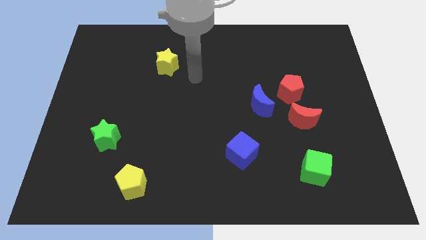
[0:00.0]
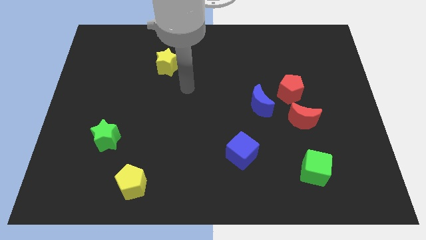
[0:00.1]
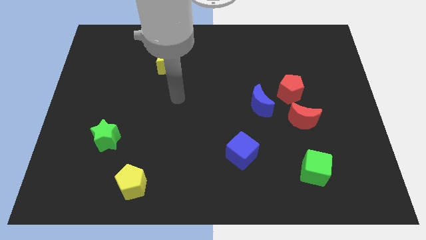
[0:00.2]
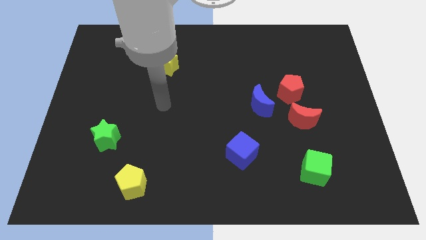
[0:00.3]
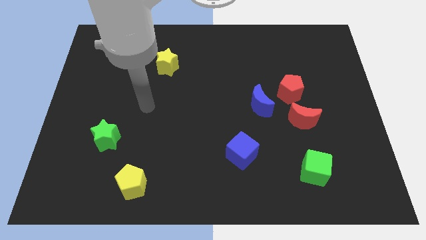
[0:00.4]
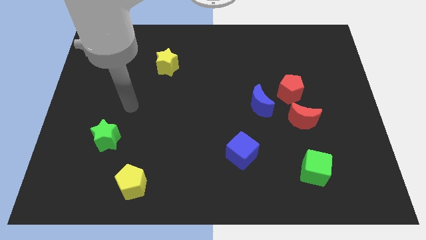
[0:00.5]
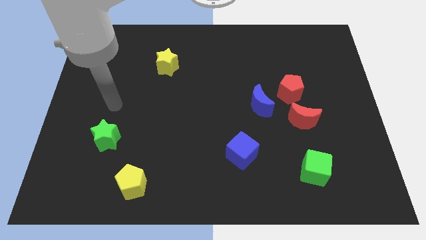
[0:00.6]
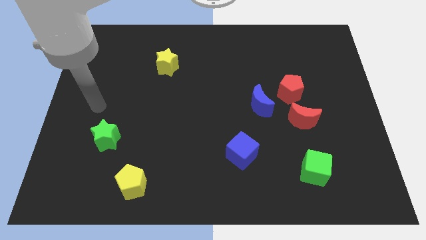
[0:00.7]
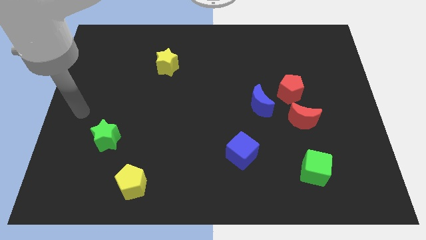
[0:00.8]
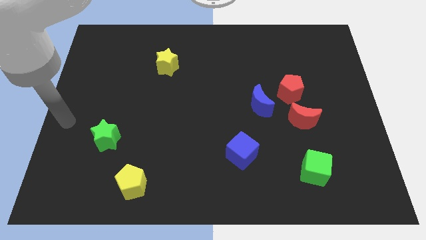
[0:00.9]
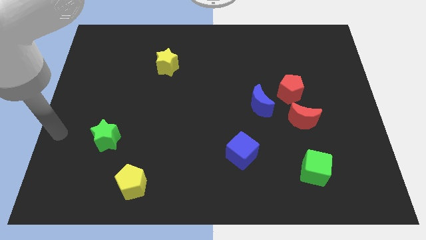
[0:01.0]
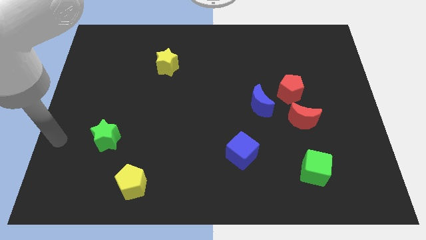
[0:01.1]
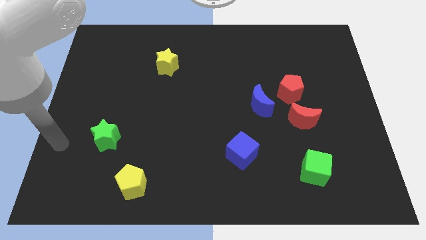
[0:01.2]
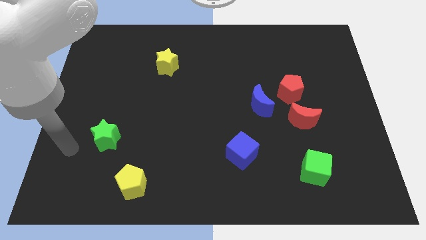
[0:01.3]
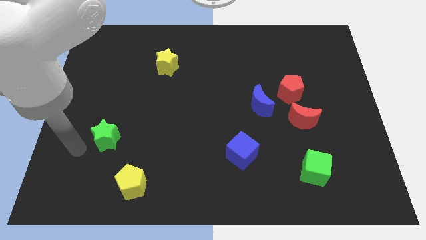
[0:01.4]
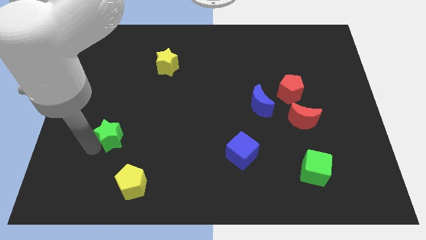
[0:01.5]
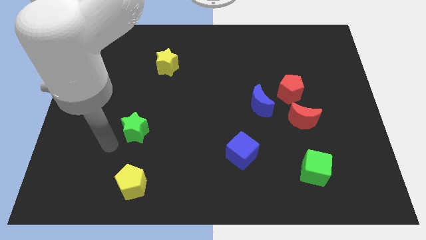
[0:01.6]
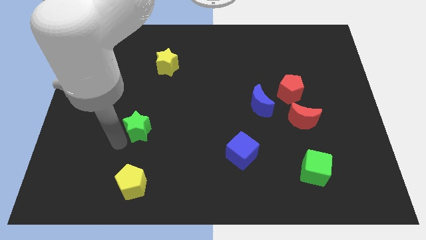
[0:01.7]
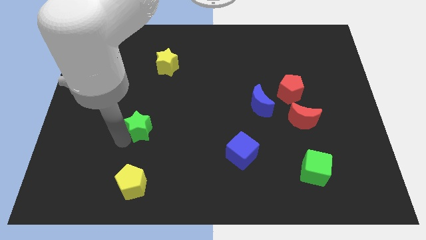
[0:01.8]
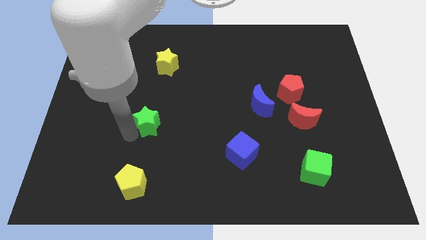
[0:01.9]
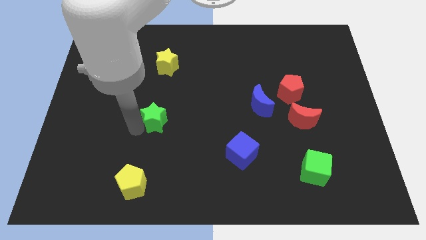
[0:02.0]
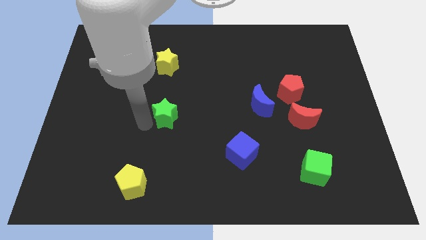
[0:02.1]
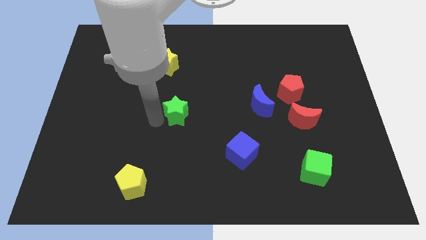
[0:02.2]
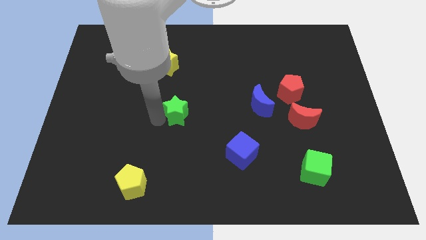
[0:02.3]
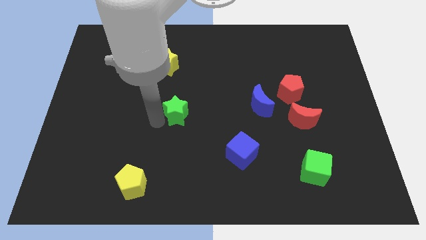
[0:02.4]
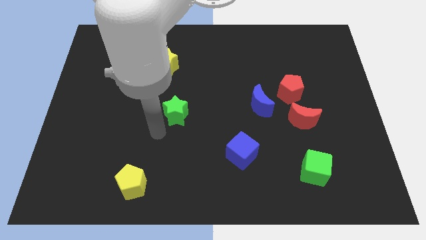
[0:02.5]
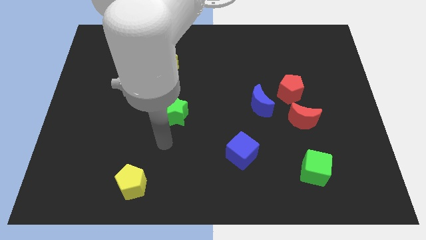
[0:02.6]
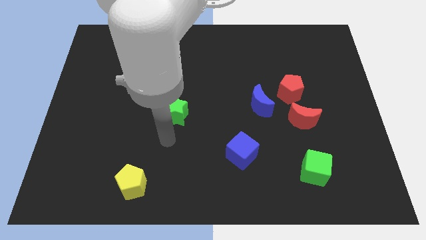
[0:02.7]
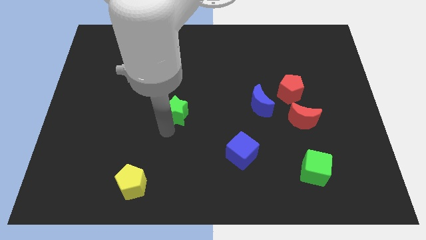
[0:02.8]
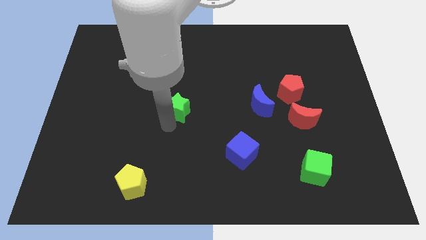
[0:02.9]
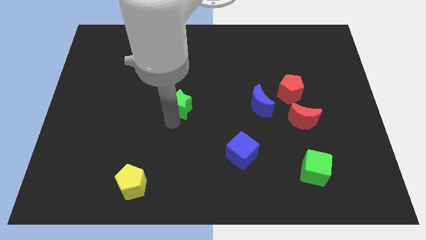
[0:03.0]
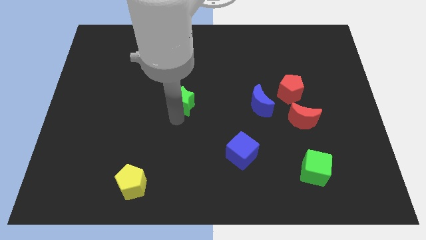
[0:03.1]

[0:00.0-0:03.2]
move the green star diagonally top right to the yellow pentagon

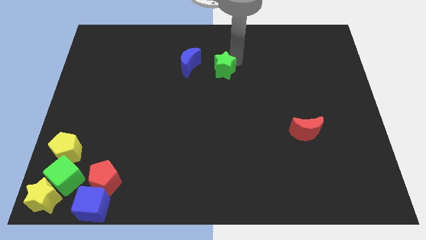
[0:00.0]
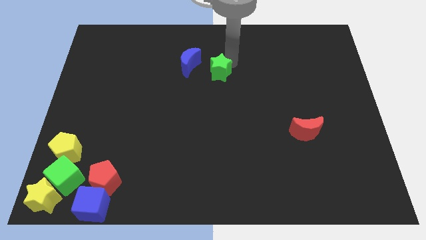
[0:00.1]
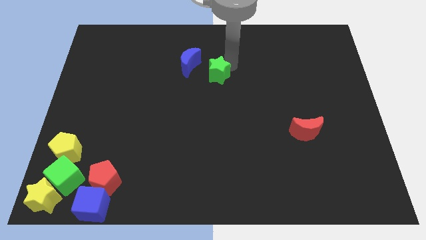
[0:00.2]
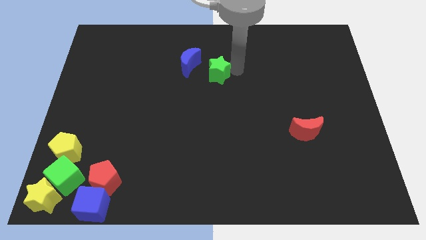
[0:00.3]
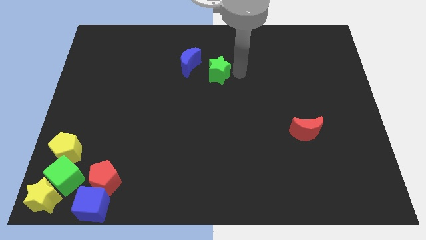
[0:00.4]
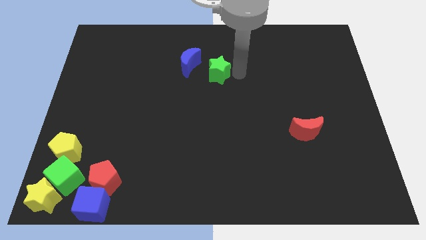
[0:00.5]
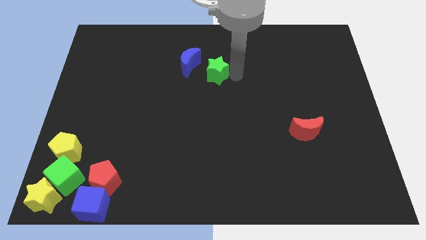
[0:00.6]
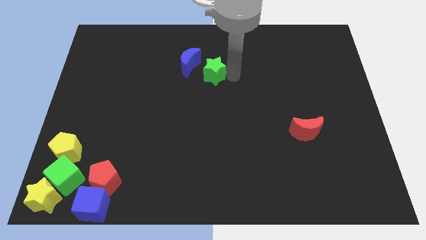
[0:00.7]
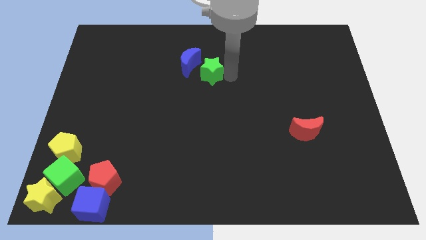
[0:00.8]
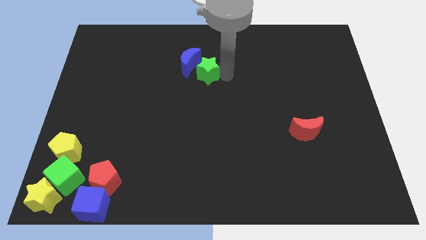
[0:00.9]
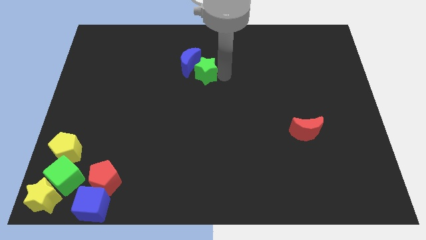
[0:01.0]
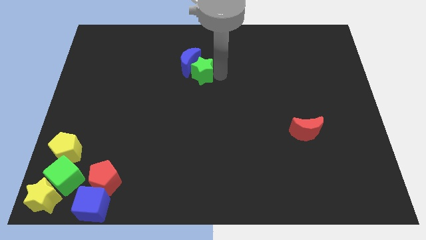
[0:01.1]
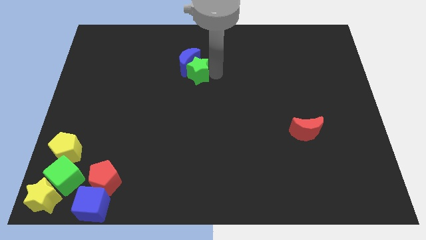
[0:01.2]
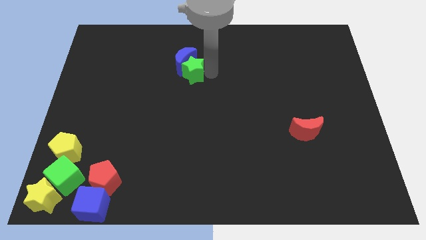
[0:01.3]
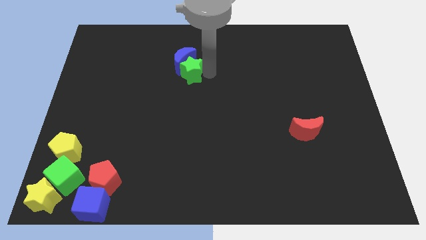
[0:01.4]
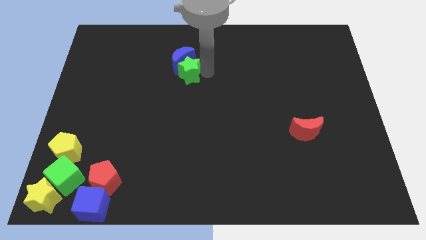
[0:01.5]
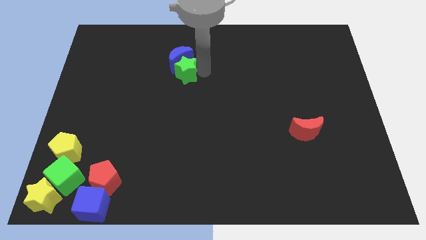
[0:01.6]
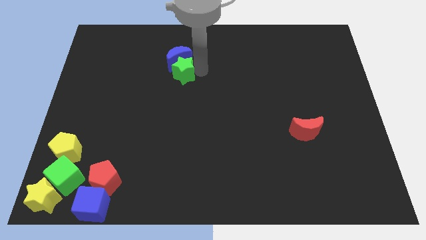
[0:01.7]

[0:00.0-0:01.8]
push the green star into the blue crescent

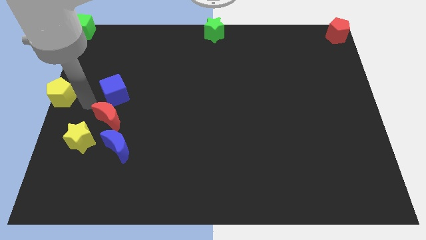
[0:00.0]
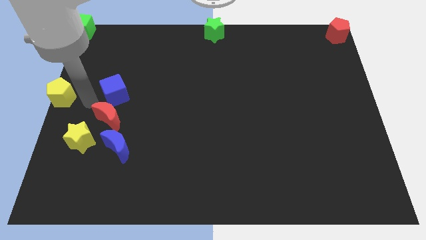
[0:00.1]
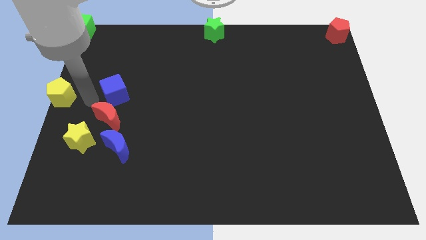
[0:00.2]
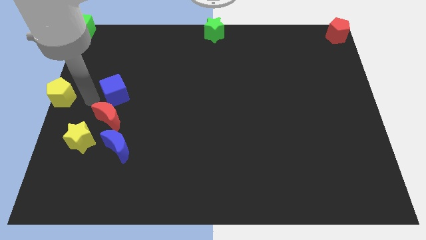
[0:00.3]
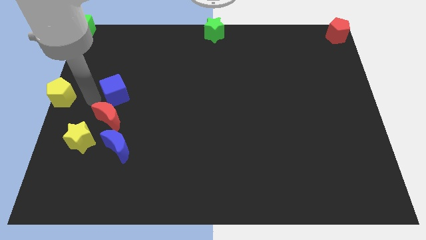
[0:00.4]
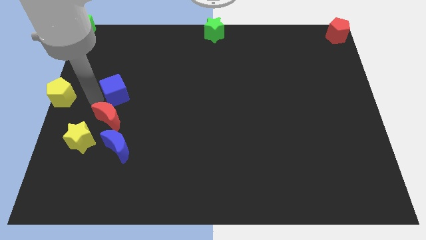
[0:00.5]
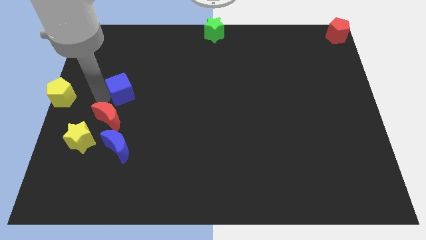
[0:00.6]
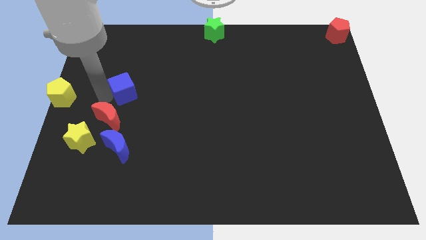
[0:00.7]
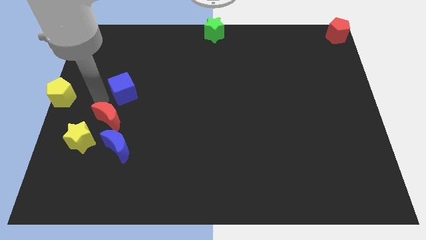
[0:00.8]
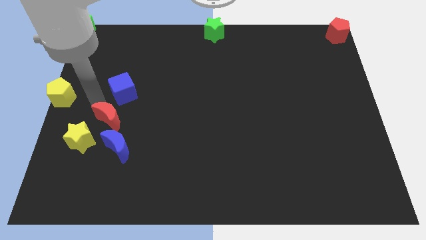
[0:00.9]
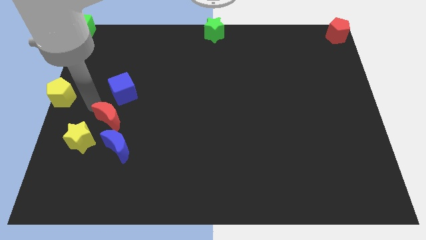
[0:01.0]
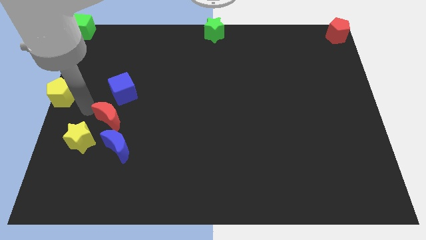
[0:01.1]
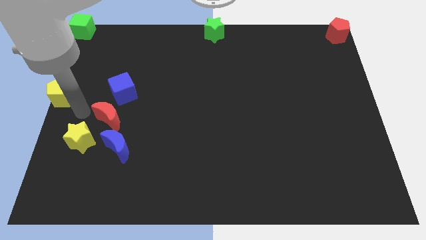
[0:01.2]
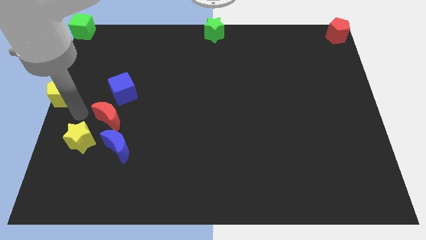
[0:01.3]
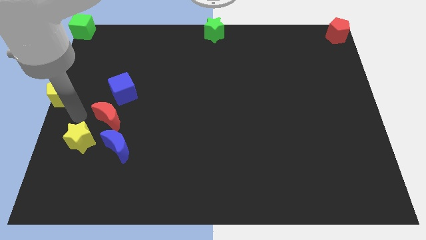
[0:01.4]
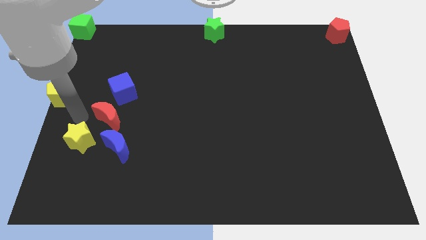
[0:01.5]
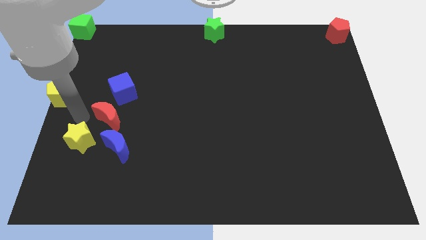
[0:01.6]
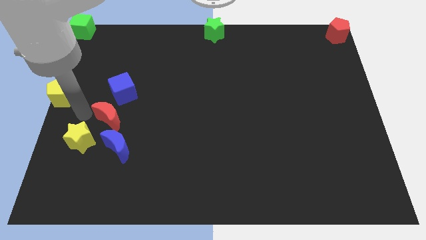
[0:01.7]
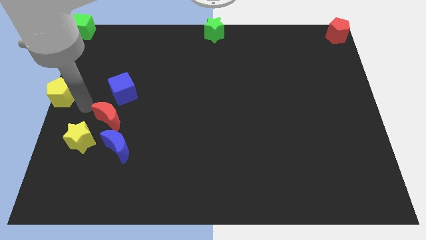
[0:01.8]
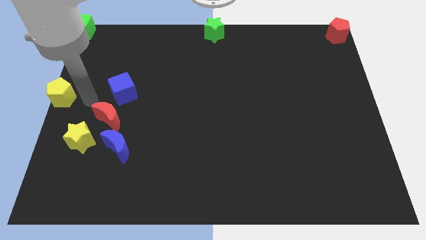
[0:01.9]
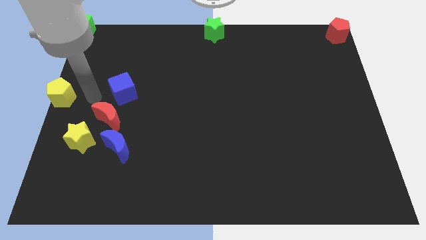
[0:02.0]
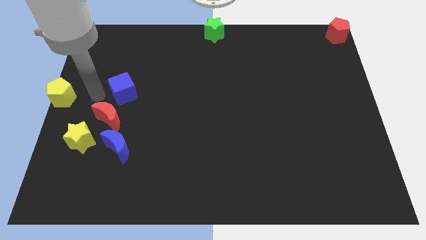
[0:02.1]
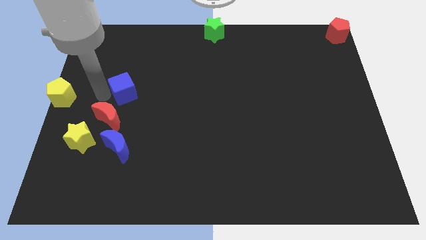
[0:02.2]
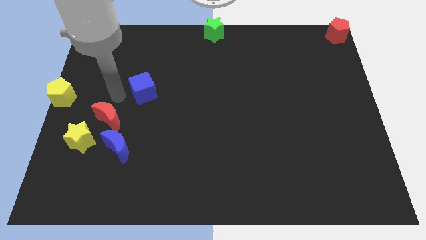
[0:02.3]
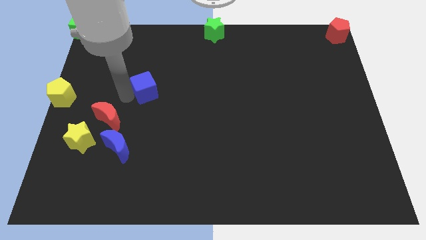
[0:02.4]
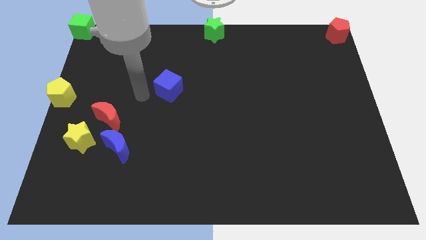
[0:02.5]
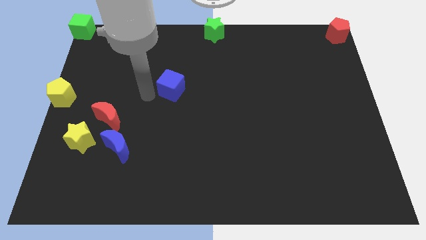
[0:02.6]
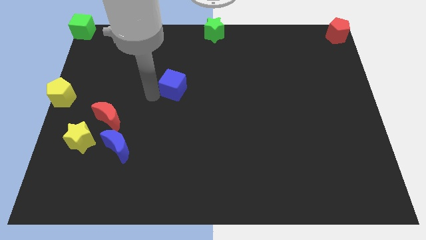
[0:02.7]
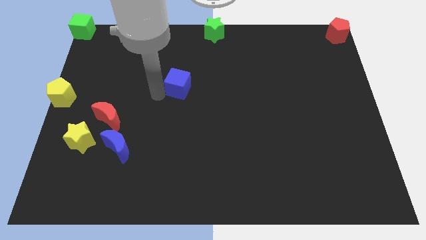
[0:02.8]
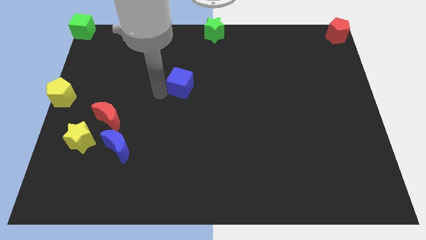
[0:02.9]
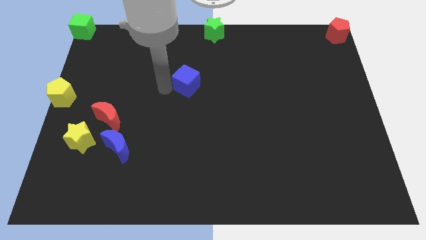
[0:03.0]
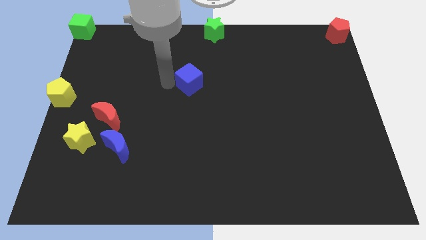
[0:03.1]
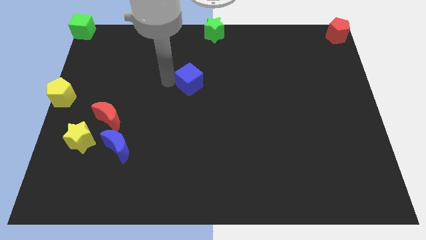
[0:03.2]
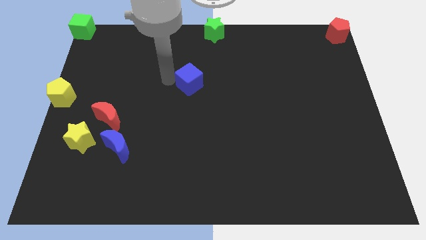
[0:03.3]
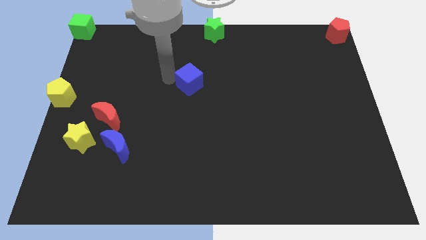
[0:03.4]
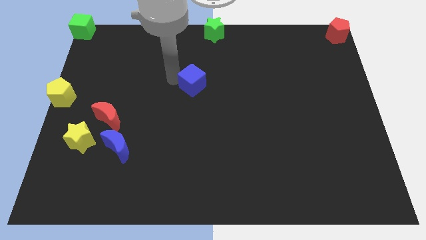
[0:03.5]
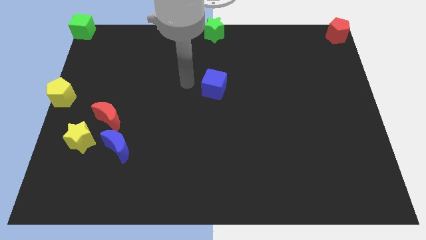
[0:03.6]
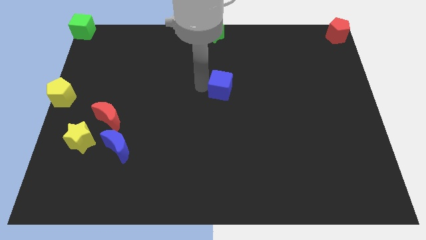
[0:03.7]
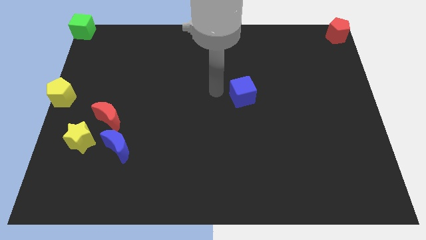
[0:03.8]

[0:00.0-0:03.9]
move the blue cube away from the red crescent

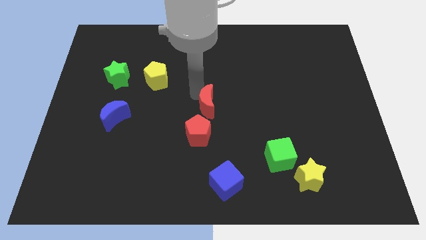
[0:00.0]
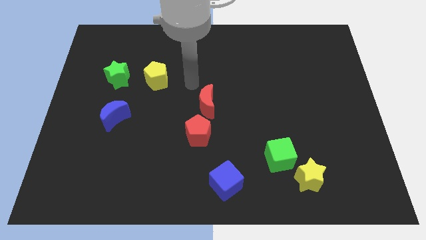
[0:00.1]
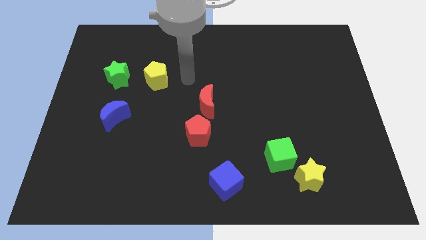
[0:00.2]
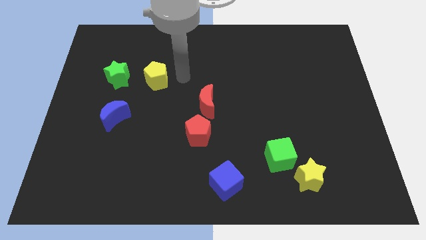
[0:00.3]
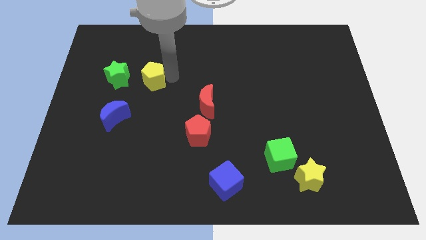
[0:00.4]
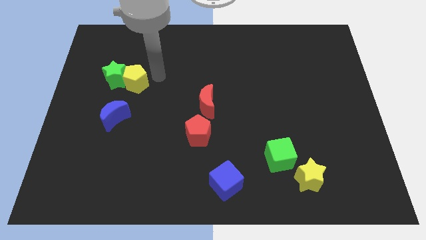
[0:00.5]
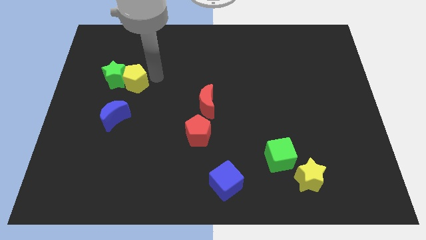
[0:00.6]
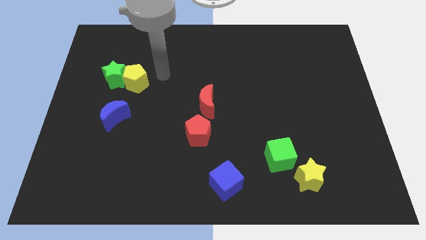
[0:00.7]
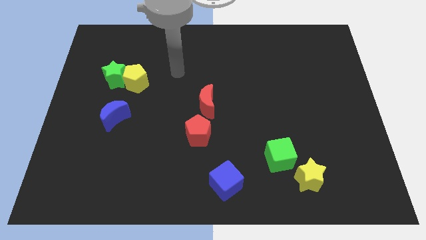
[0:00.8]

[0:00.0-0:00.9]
place the yellow pentagon into the green star
